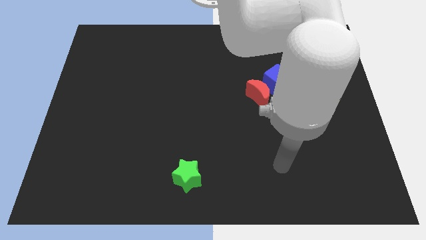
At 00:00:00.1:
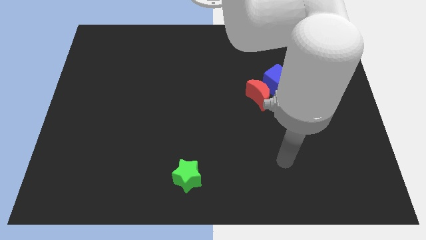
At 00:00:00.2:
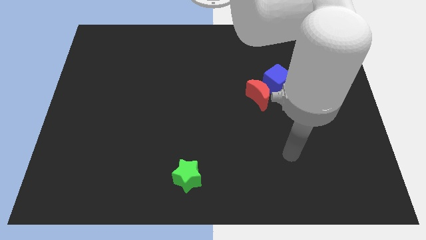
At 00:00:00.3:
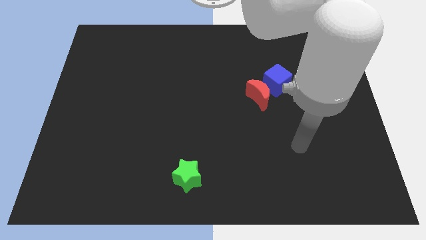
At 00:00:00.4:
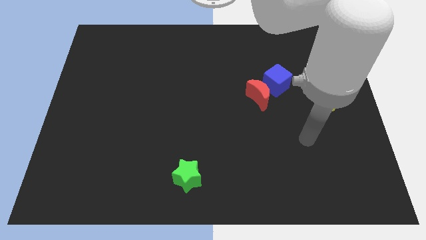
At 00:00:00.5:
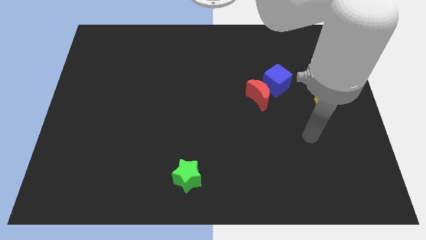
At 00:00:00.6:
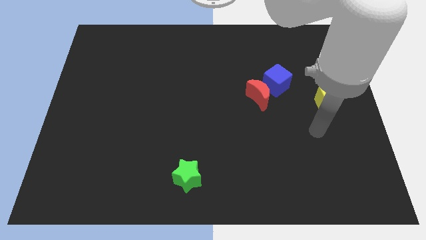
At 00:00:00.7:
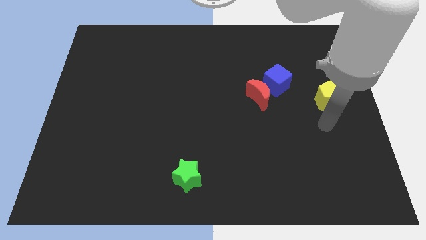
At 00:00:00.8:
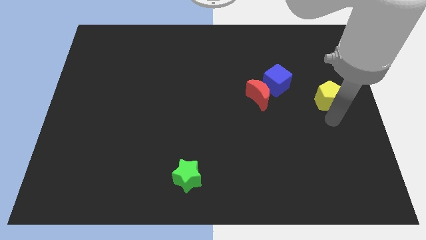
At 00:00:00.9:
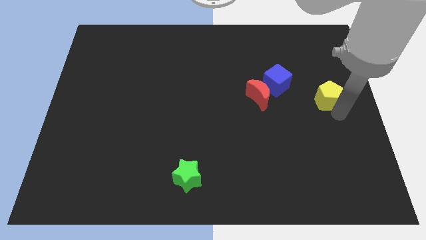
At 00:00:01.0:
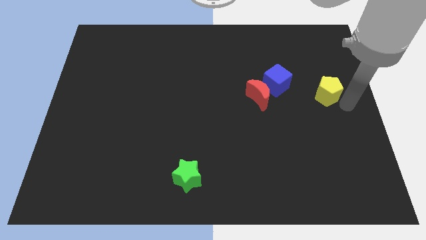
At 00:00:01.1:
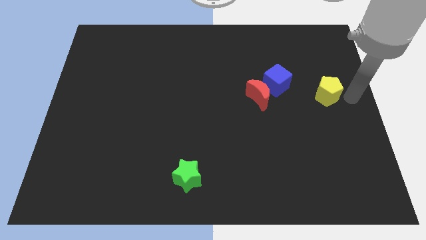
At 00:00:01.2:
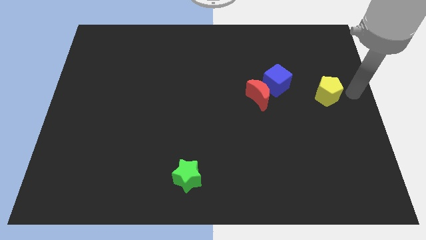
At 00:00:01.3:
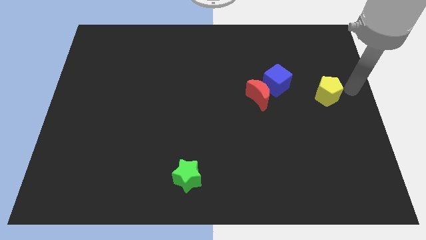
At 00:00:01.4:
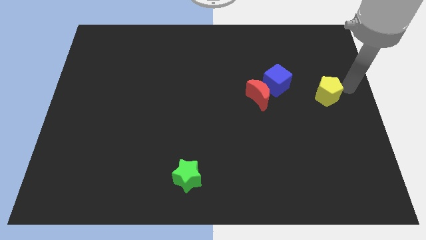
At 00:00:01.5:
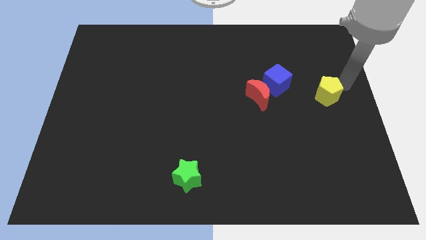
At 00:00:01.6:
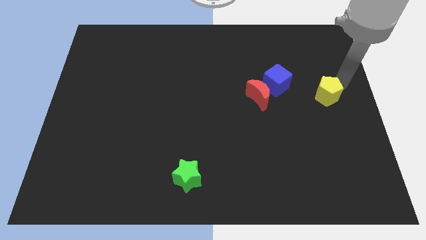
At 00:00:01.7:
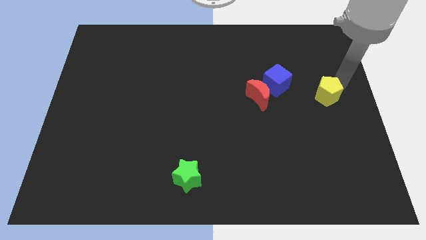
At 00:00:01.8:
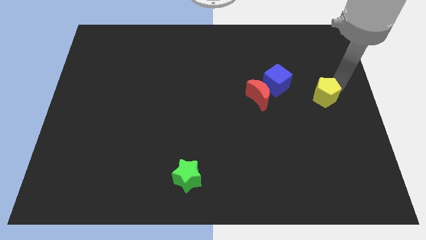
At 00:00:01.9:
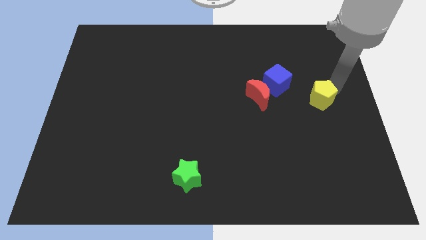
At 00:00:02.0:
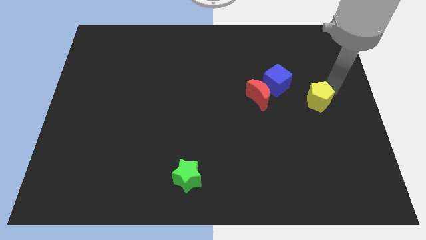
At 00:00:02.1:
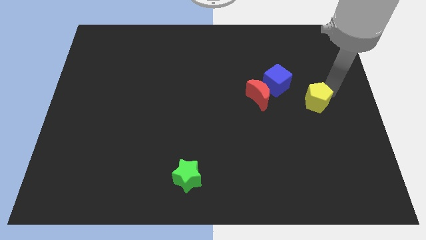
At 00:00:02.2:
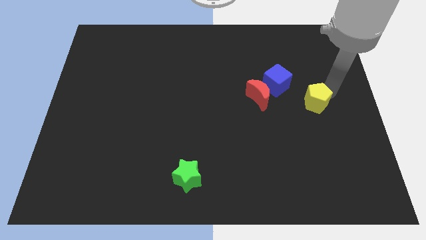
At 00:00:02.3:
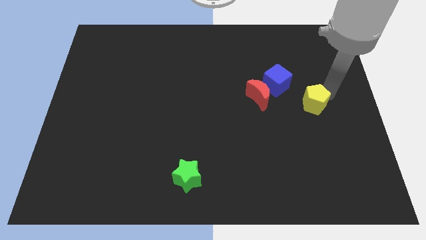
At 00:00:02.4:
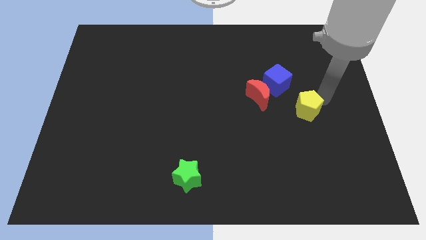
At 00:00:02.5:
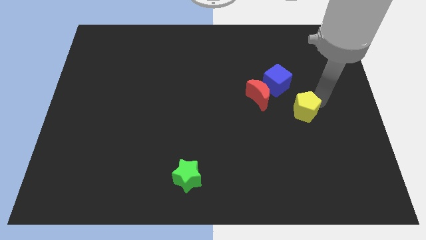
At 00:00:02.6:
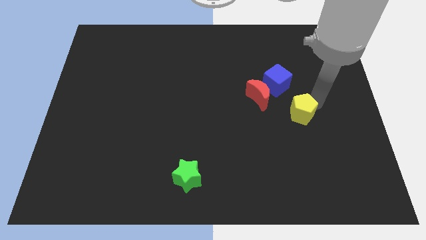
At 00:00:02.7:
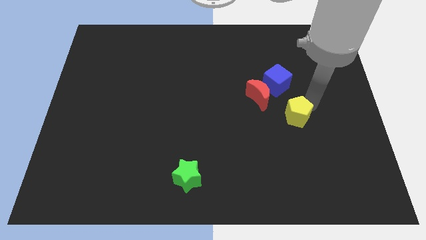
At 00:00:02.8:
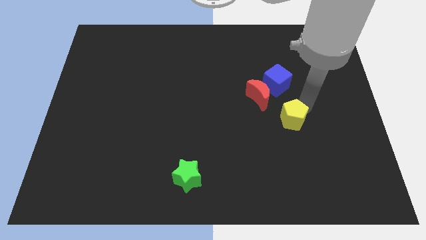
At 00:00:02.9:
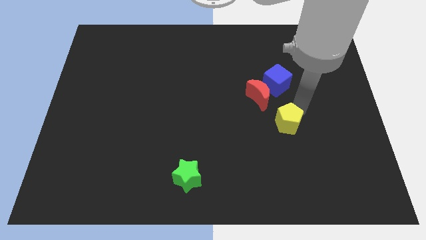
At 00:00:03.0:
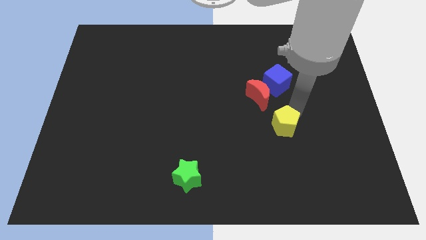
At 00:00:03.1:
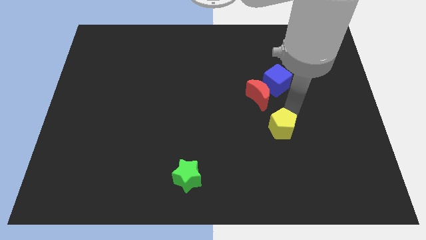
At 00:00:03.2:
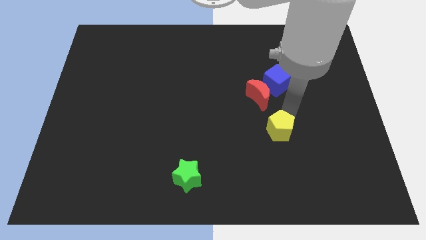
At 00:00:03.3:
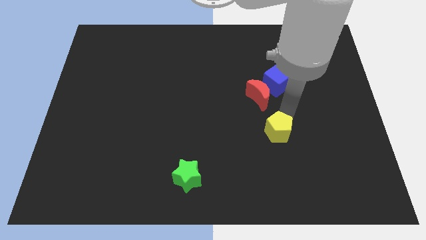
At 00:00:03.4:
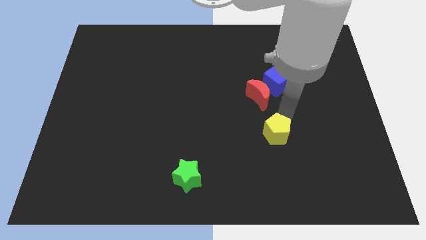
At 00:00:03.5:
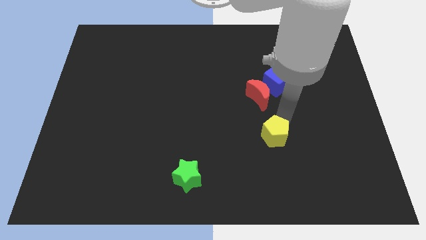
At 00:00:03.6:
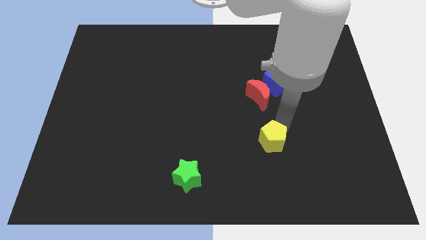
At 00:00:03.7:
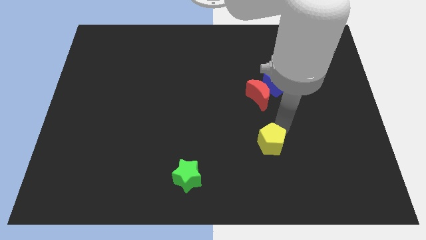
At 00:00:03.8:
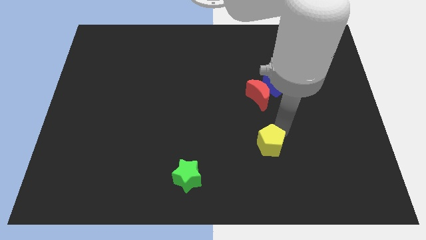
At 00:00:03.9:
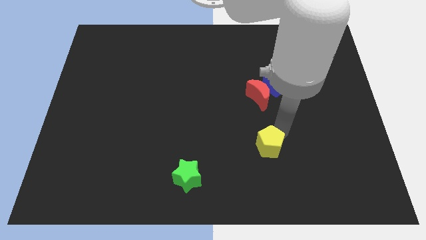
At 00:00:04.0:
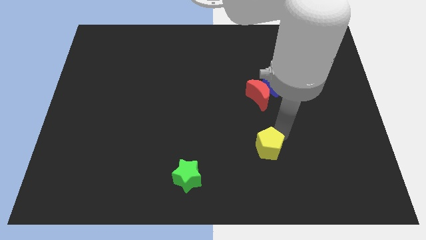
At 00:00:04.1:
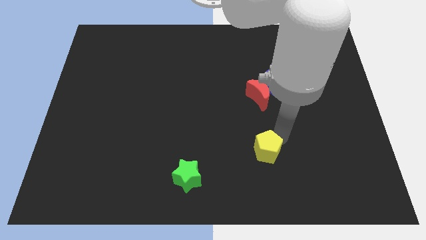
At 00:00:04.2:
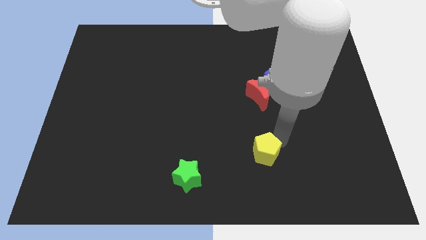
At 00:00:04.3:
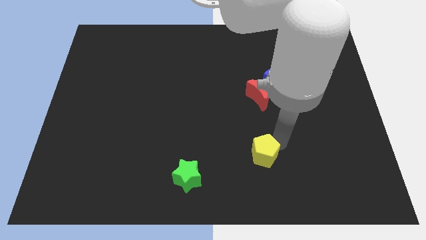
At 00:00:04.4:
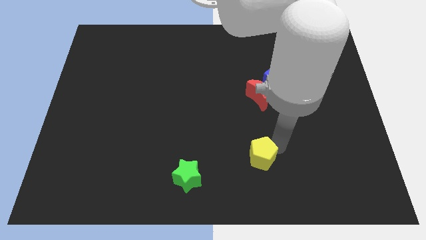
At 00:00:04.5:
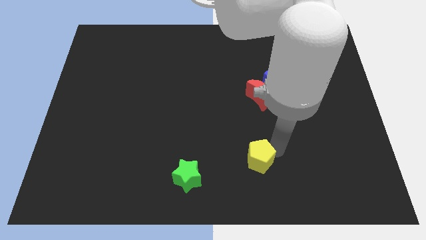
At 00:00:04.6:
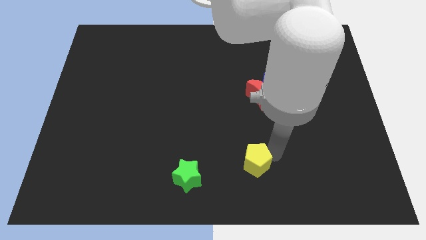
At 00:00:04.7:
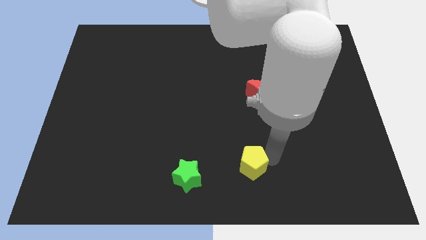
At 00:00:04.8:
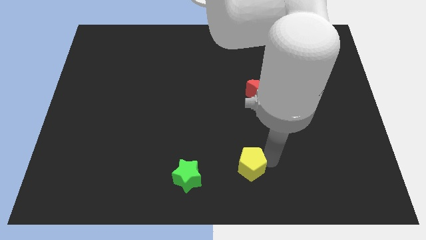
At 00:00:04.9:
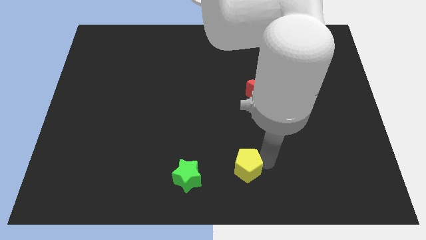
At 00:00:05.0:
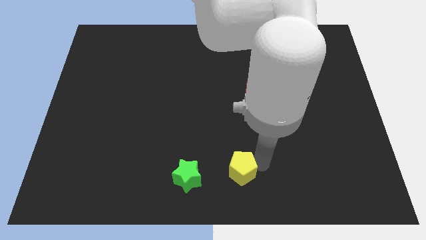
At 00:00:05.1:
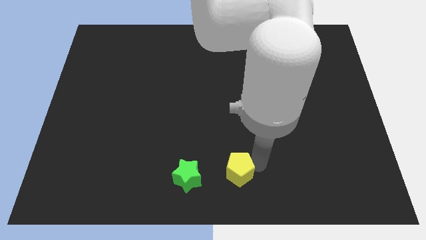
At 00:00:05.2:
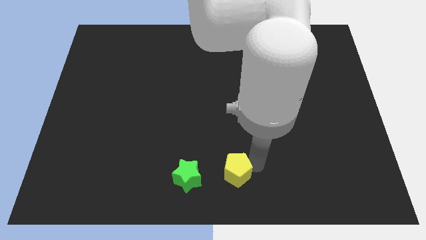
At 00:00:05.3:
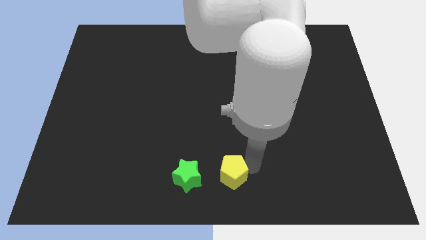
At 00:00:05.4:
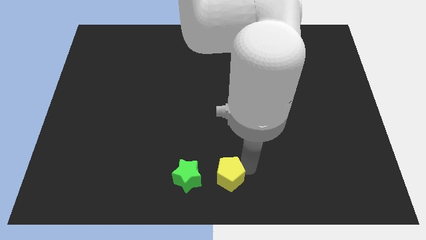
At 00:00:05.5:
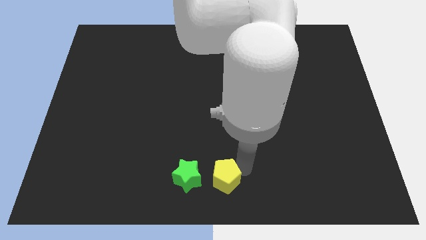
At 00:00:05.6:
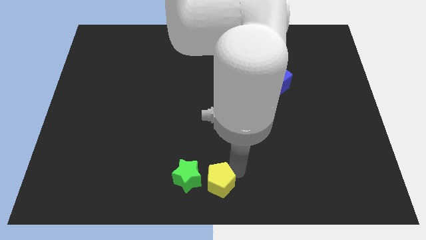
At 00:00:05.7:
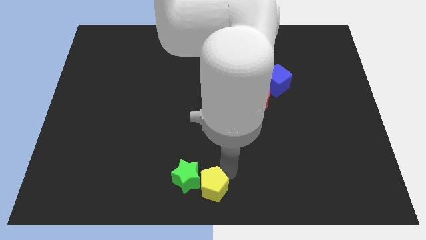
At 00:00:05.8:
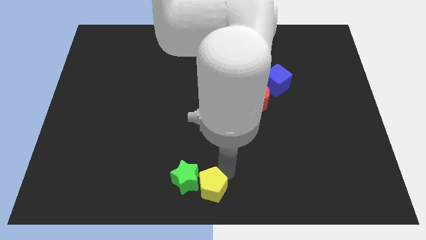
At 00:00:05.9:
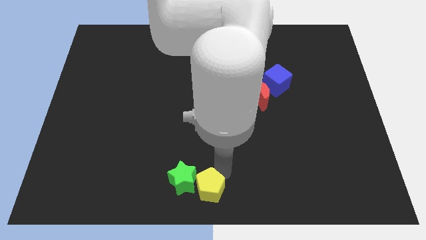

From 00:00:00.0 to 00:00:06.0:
move the yellow block towards the green star

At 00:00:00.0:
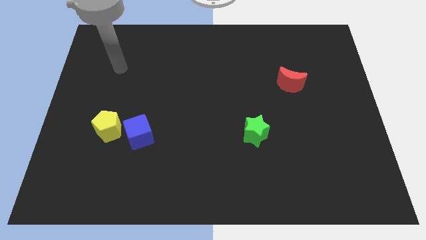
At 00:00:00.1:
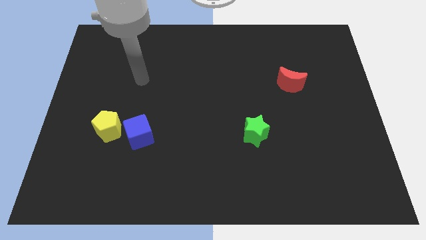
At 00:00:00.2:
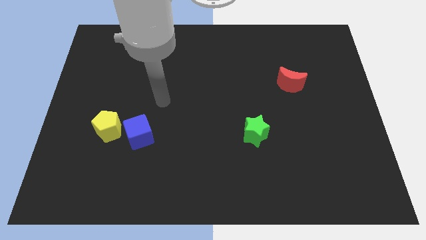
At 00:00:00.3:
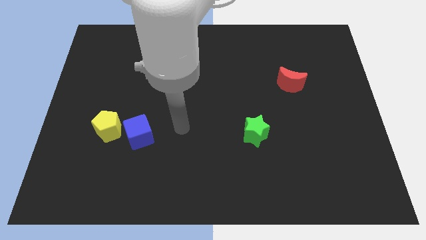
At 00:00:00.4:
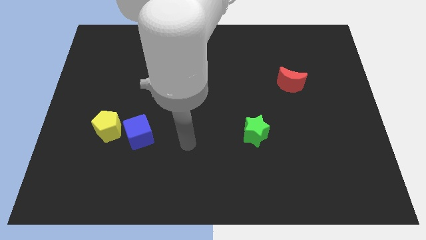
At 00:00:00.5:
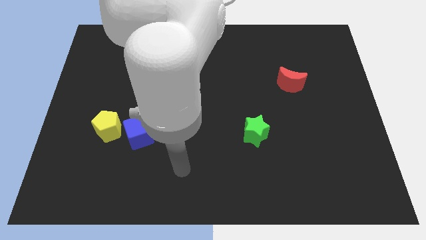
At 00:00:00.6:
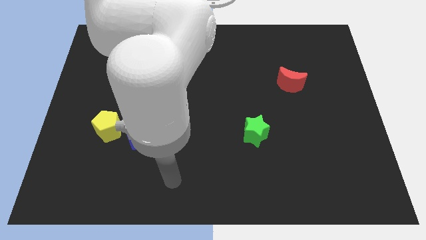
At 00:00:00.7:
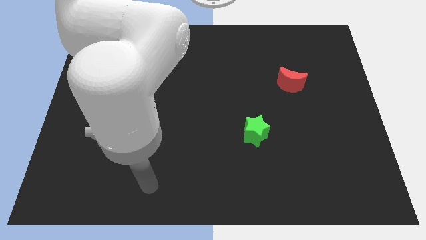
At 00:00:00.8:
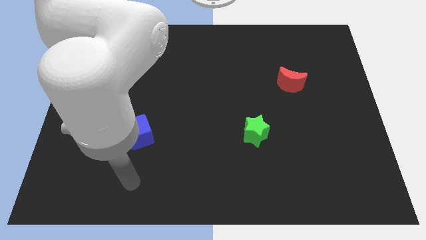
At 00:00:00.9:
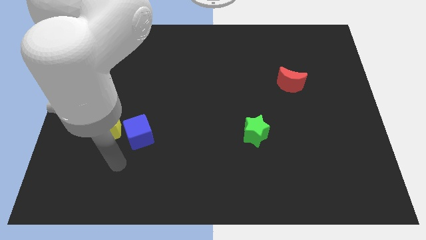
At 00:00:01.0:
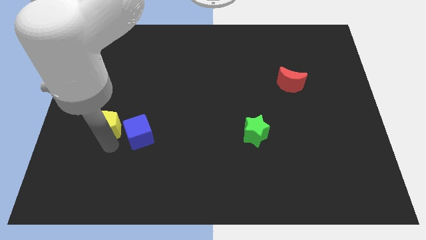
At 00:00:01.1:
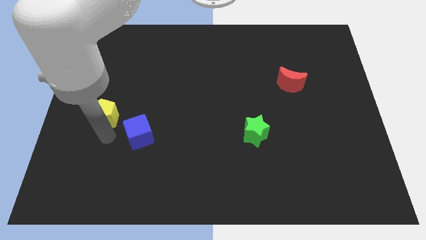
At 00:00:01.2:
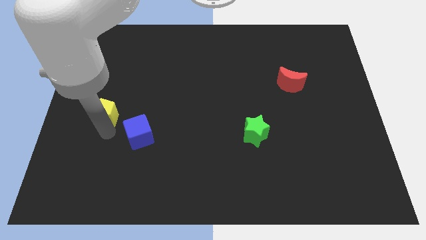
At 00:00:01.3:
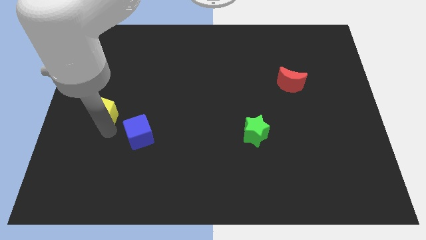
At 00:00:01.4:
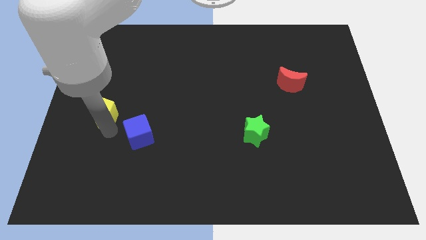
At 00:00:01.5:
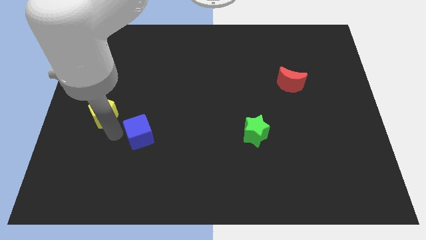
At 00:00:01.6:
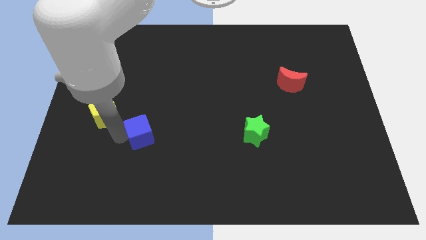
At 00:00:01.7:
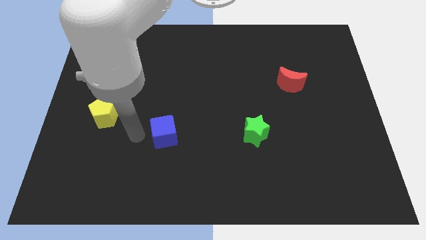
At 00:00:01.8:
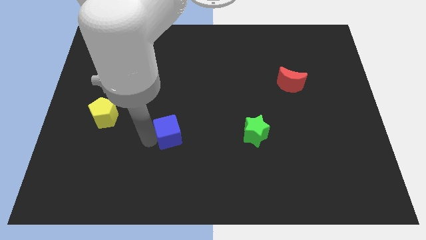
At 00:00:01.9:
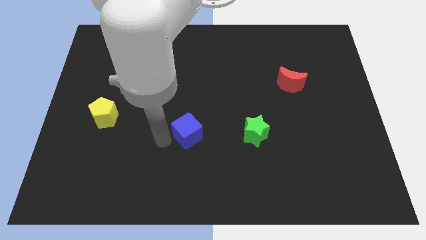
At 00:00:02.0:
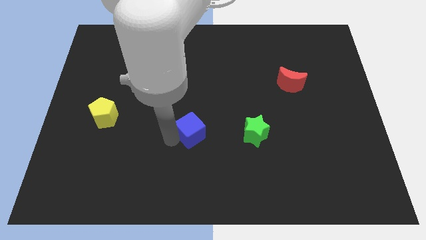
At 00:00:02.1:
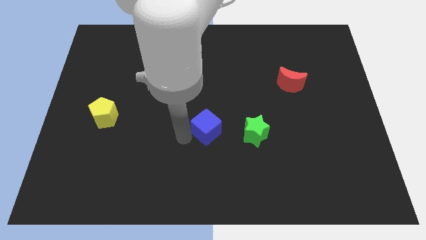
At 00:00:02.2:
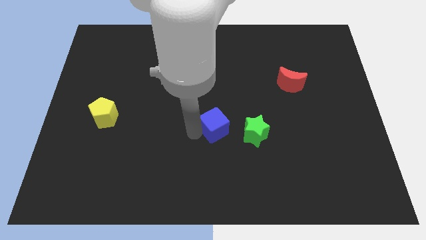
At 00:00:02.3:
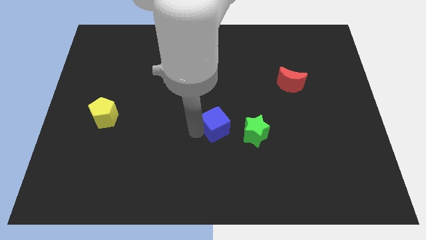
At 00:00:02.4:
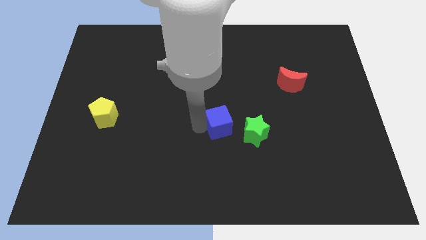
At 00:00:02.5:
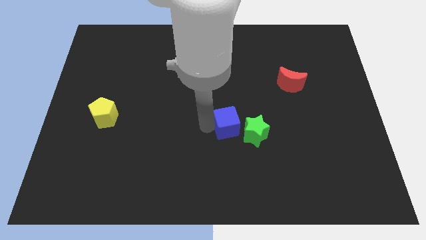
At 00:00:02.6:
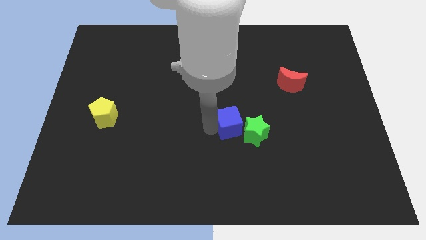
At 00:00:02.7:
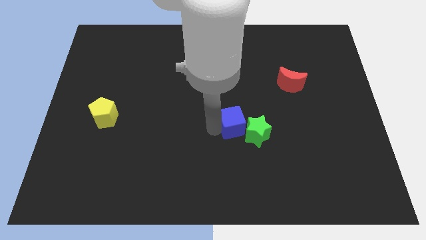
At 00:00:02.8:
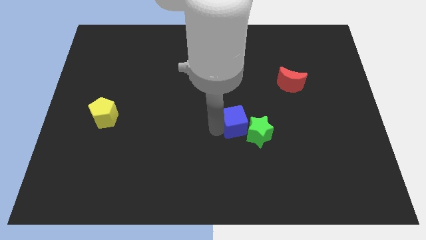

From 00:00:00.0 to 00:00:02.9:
push the blue block close to the star
